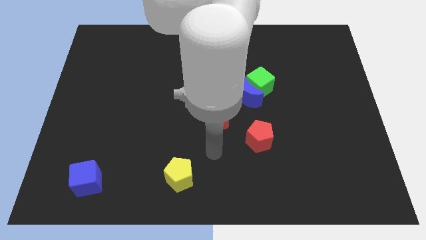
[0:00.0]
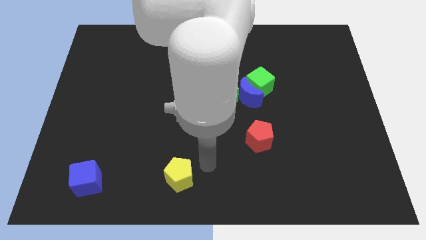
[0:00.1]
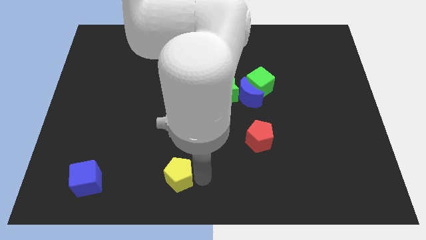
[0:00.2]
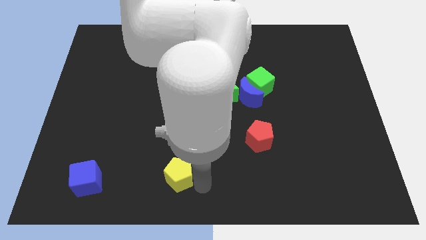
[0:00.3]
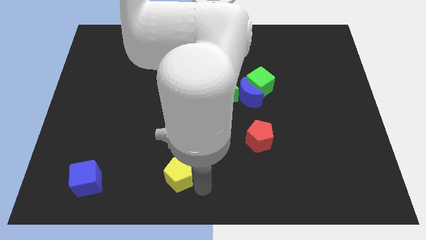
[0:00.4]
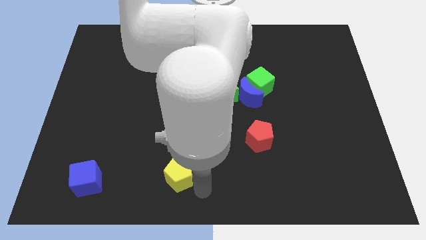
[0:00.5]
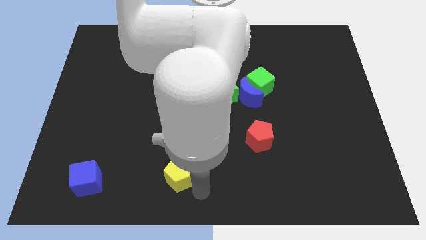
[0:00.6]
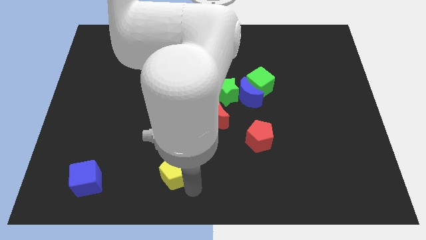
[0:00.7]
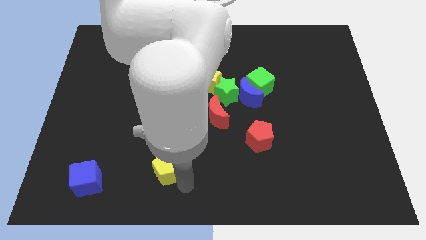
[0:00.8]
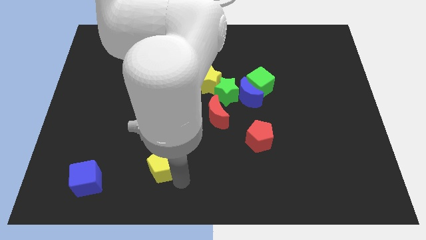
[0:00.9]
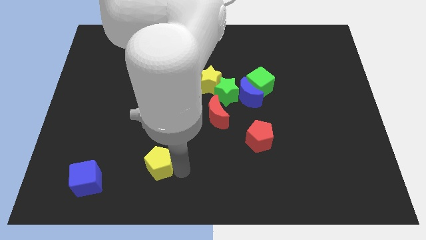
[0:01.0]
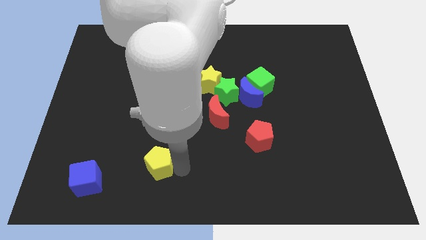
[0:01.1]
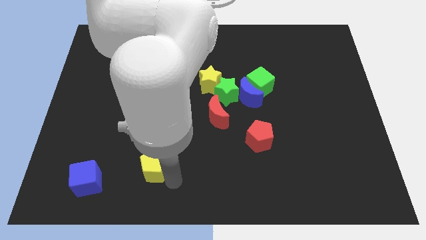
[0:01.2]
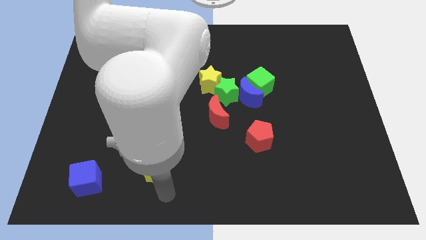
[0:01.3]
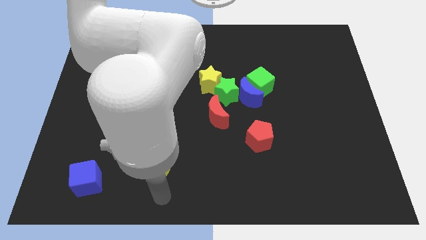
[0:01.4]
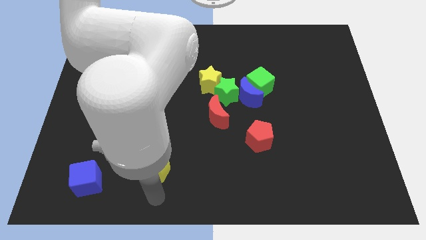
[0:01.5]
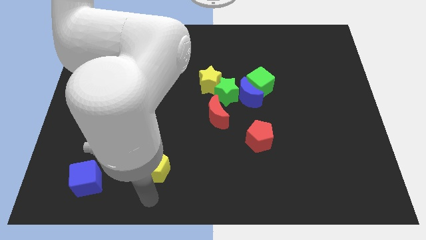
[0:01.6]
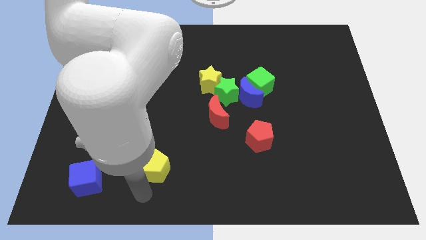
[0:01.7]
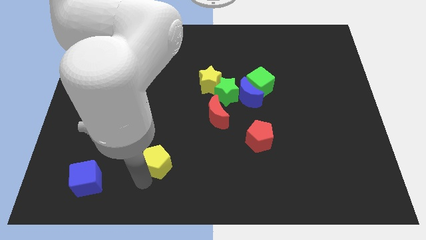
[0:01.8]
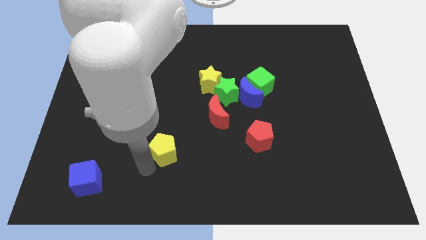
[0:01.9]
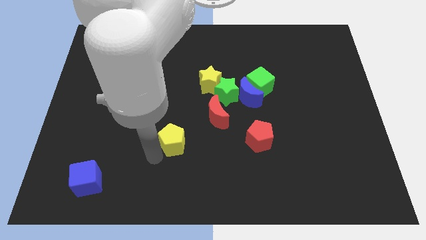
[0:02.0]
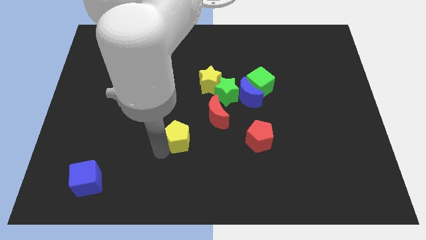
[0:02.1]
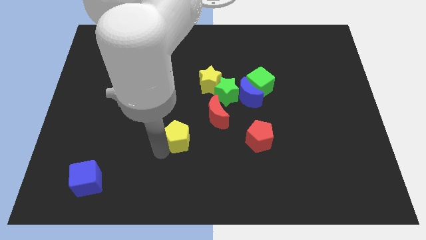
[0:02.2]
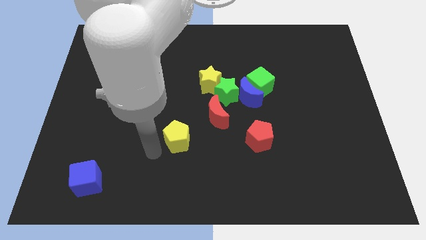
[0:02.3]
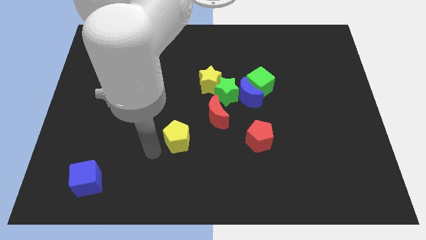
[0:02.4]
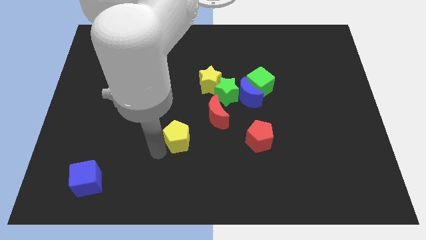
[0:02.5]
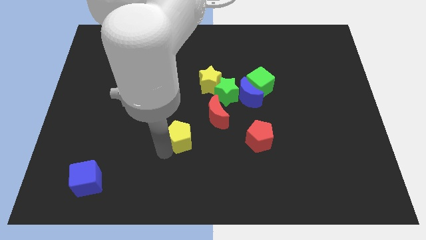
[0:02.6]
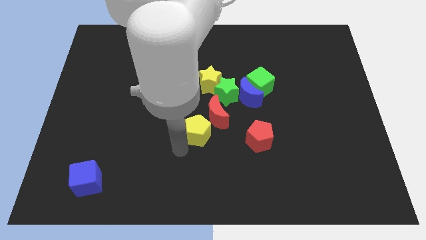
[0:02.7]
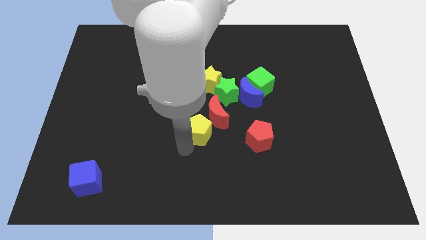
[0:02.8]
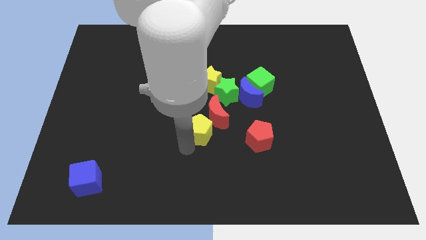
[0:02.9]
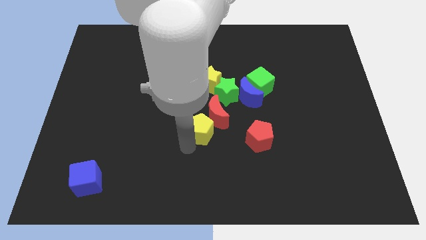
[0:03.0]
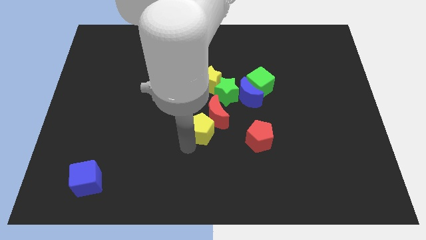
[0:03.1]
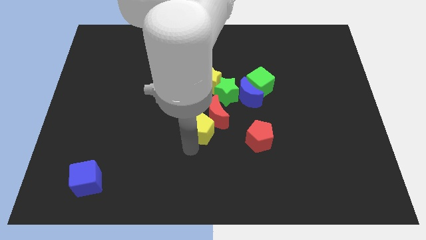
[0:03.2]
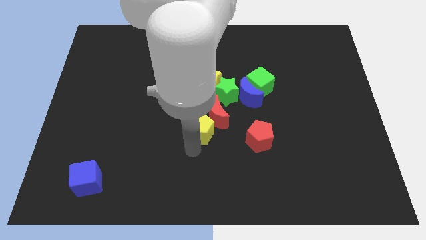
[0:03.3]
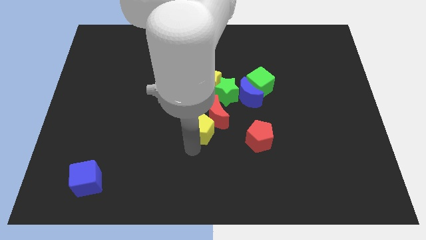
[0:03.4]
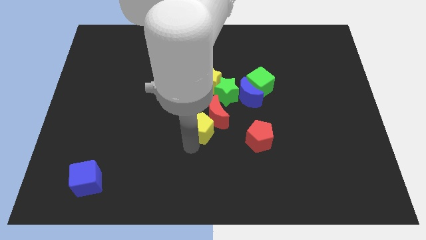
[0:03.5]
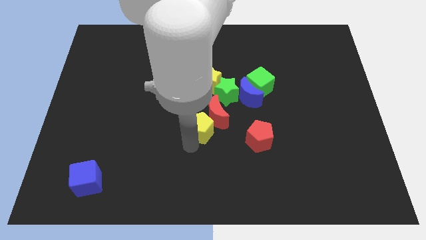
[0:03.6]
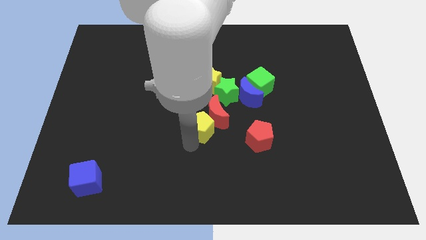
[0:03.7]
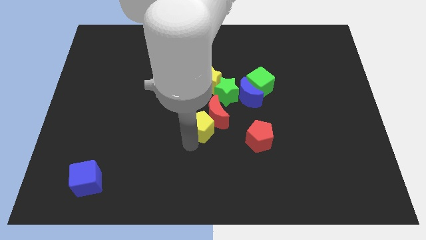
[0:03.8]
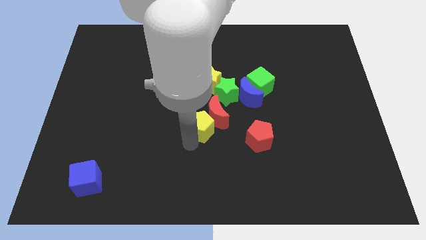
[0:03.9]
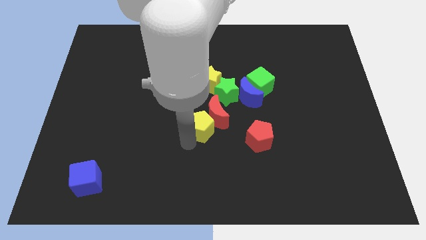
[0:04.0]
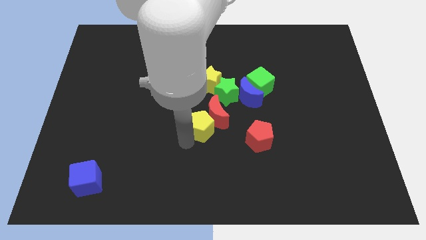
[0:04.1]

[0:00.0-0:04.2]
place yellow pentagon beside red moon

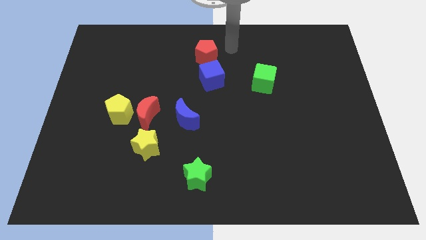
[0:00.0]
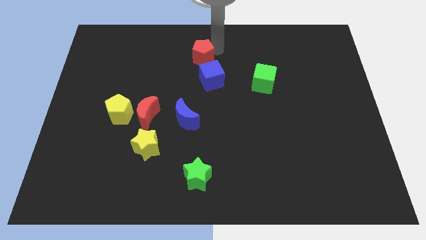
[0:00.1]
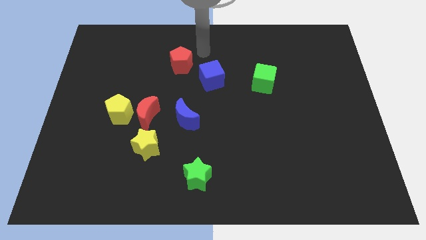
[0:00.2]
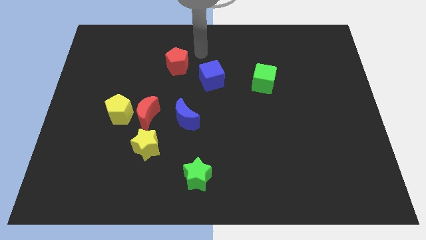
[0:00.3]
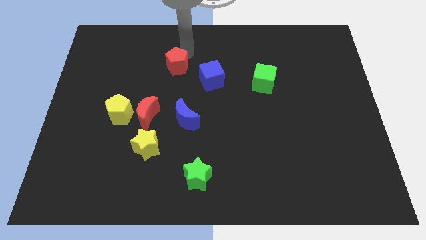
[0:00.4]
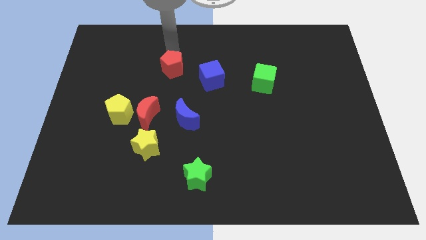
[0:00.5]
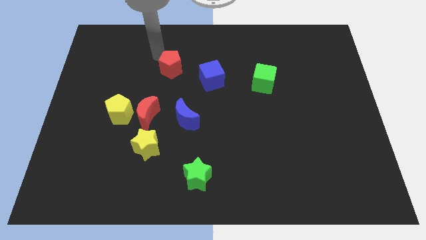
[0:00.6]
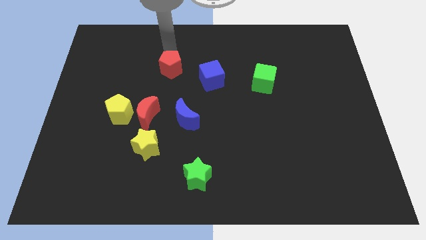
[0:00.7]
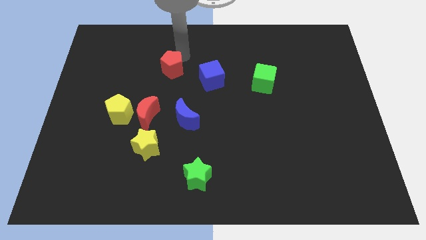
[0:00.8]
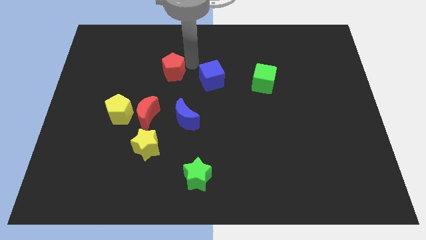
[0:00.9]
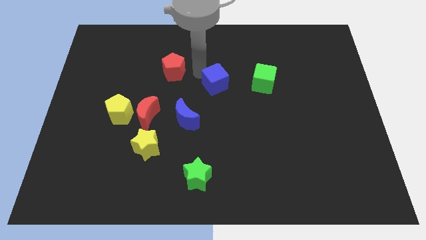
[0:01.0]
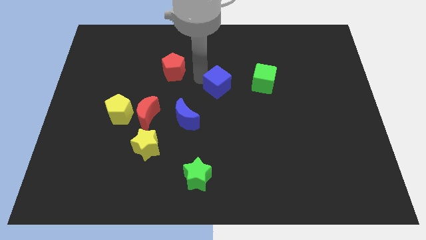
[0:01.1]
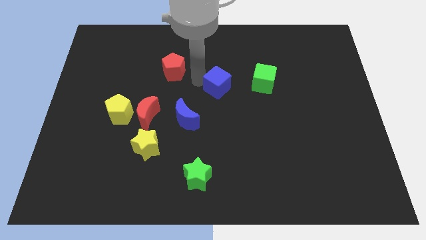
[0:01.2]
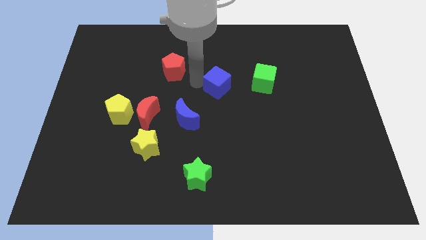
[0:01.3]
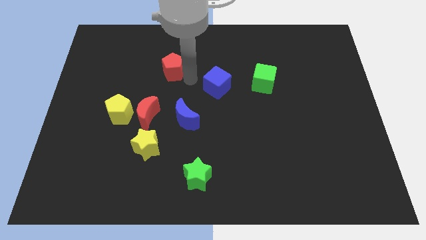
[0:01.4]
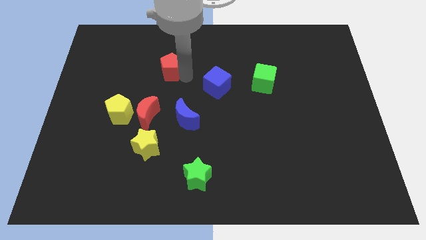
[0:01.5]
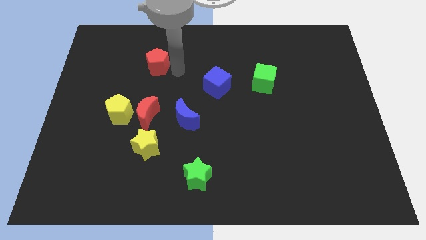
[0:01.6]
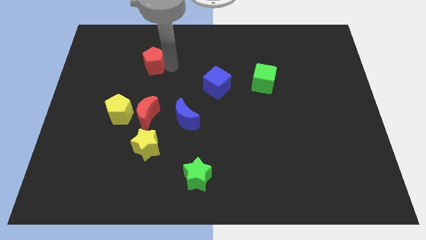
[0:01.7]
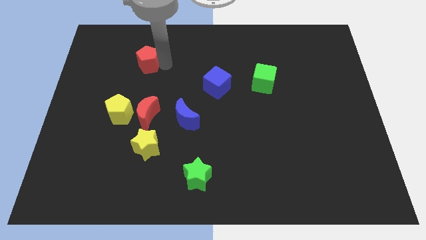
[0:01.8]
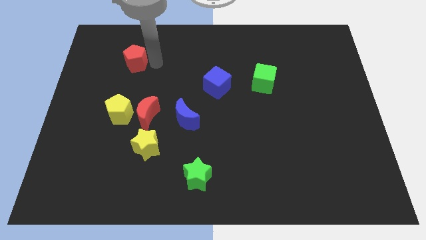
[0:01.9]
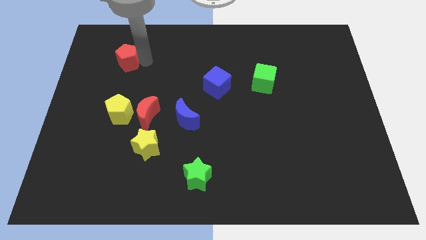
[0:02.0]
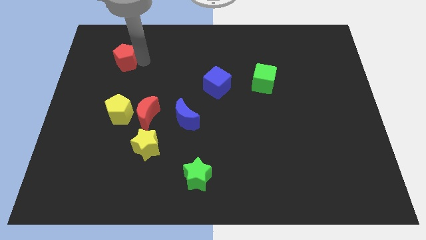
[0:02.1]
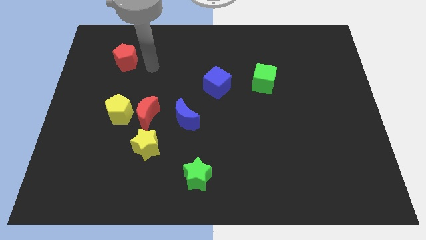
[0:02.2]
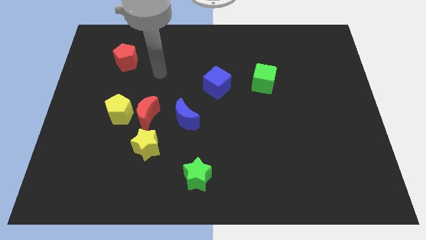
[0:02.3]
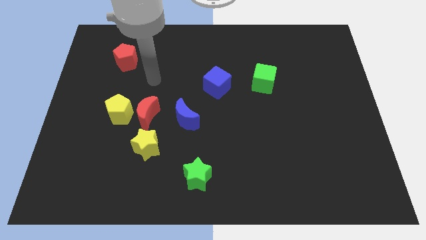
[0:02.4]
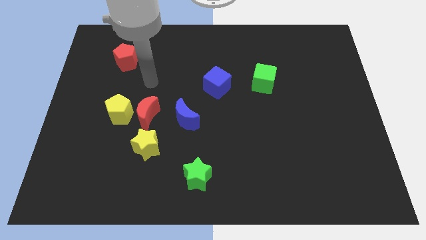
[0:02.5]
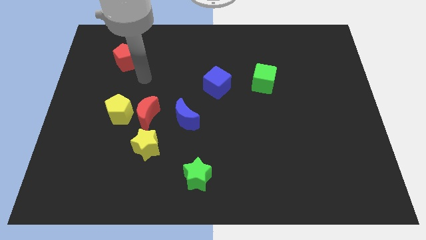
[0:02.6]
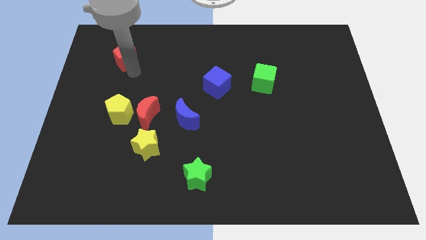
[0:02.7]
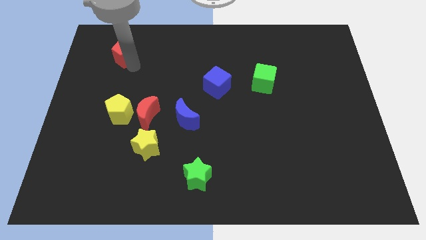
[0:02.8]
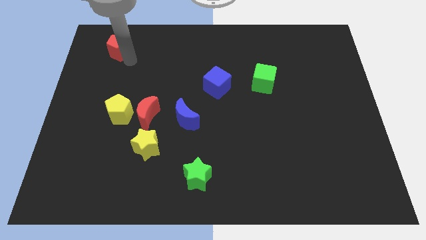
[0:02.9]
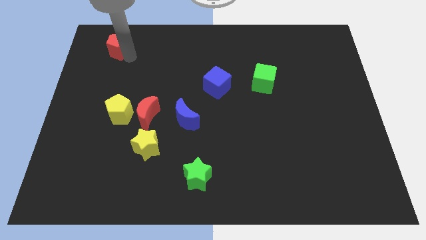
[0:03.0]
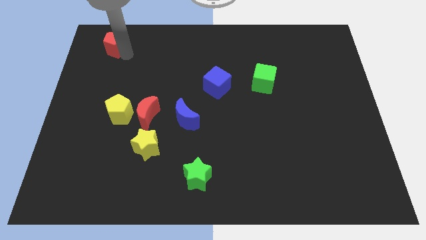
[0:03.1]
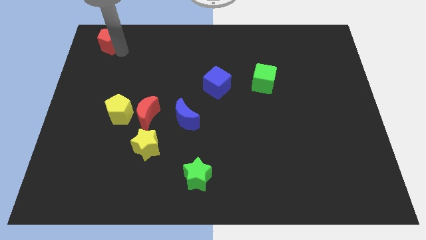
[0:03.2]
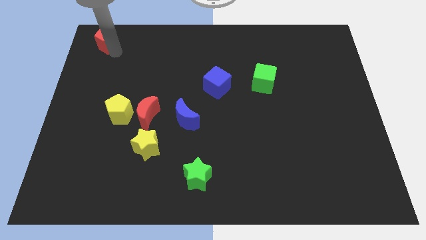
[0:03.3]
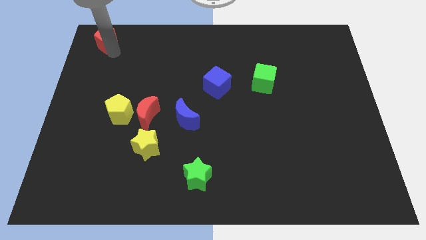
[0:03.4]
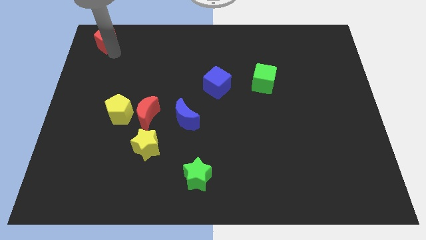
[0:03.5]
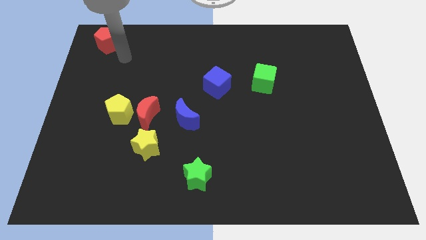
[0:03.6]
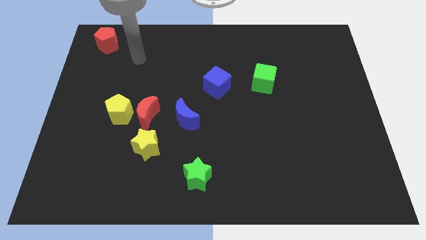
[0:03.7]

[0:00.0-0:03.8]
move the red pentagon to the top left corner of the board

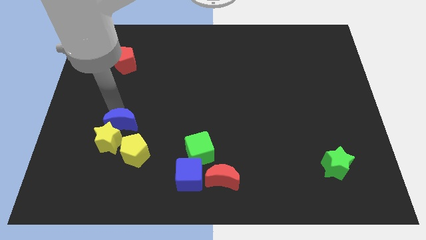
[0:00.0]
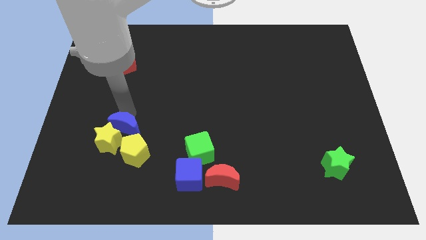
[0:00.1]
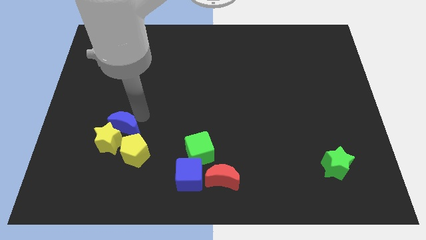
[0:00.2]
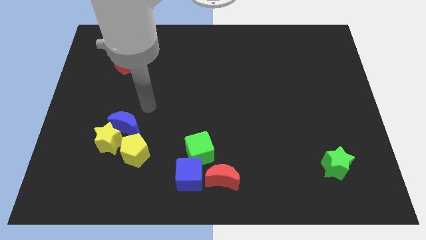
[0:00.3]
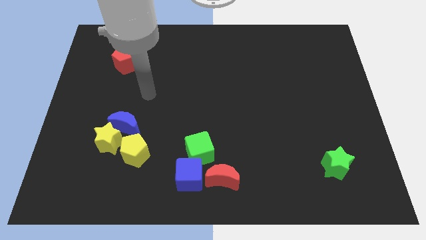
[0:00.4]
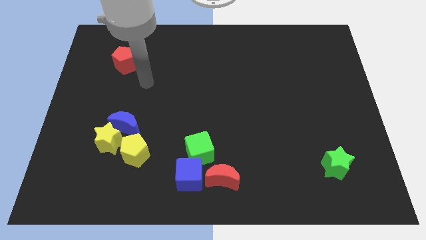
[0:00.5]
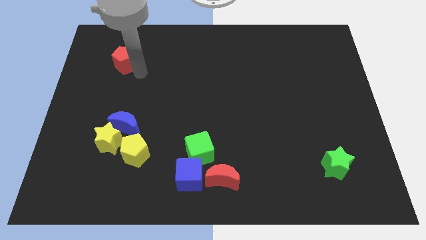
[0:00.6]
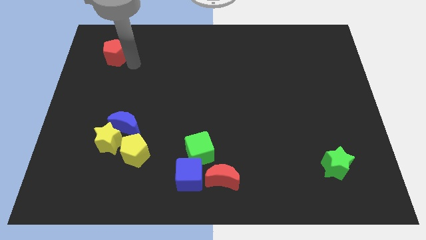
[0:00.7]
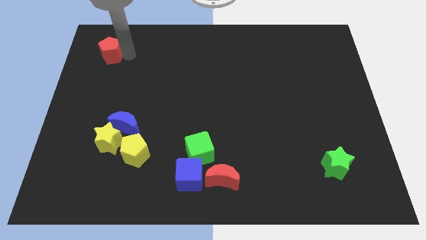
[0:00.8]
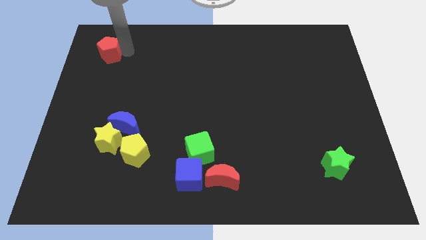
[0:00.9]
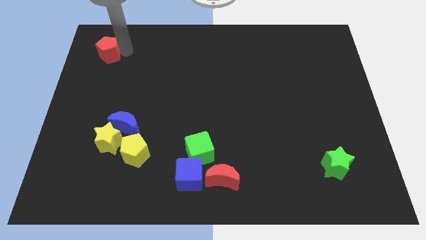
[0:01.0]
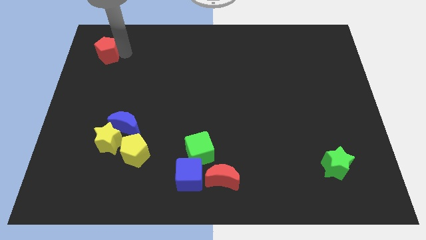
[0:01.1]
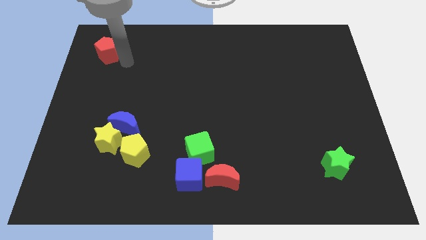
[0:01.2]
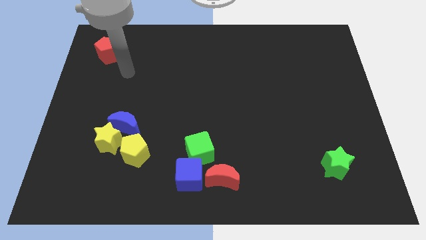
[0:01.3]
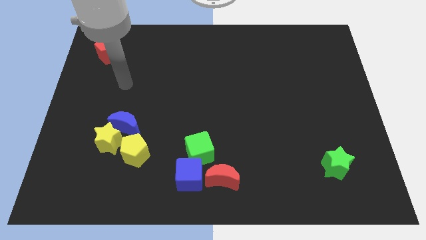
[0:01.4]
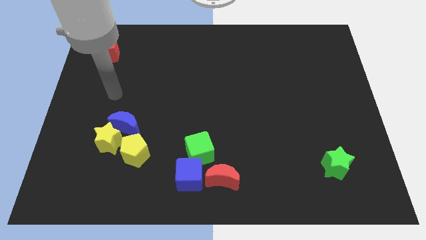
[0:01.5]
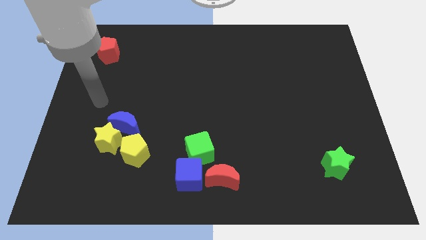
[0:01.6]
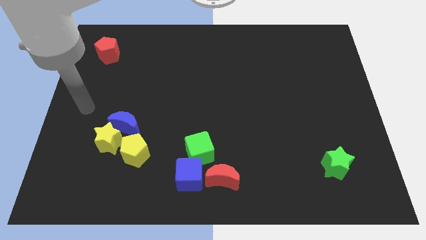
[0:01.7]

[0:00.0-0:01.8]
move the red pentagon slightly upwards
